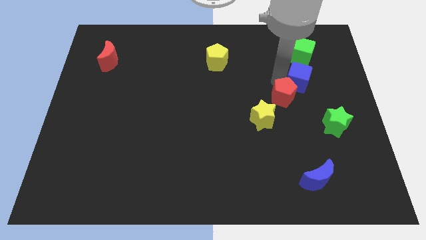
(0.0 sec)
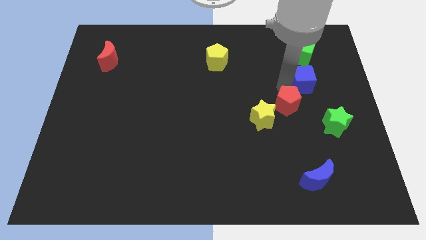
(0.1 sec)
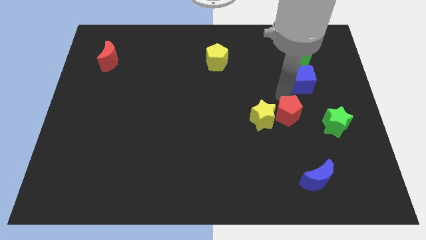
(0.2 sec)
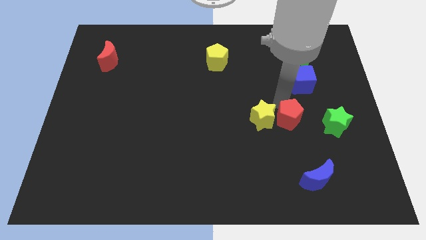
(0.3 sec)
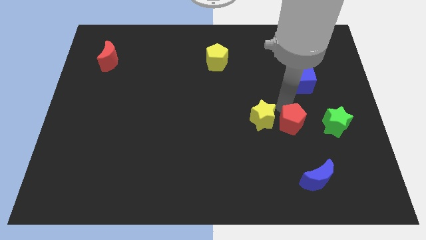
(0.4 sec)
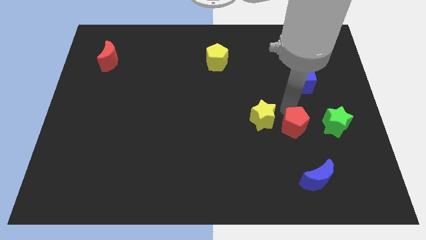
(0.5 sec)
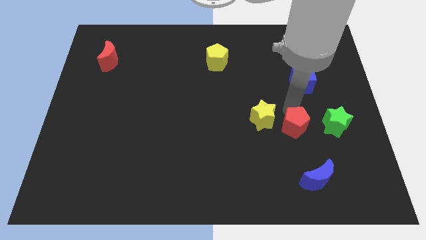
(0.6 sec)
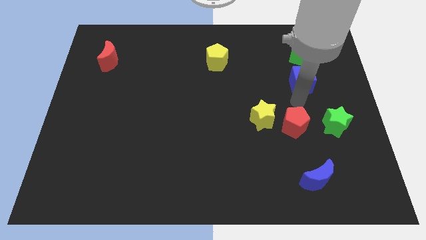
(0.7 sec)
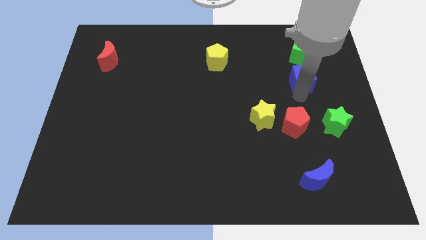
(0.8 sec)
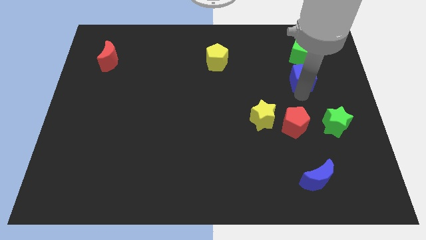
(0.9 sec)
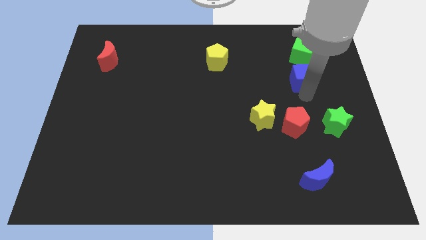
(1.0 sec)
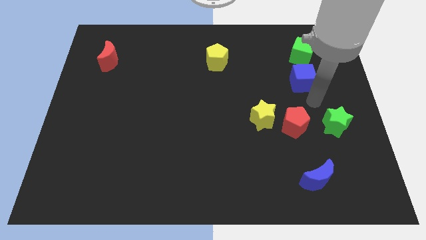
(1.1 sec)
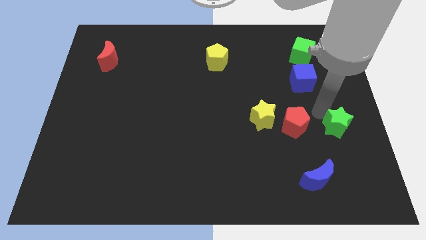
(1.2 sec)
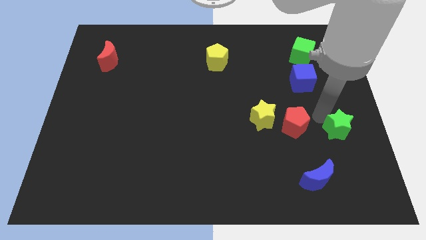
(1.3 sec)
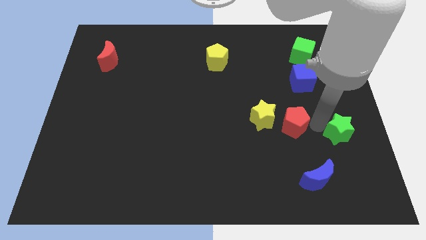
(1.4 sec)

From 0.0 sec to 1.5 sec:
push the red pentagon close to the yellow star

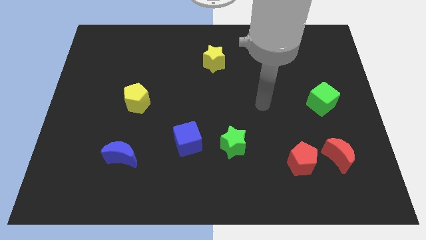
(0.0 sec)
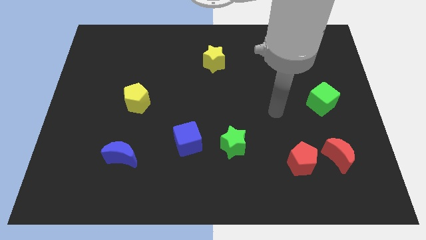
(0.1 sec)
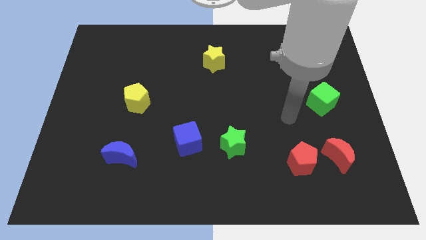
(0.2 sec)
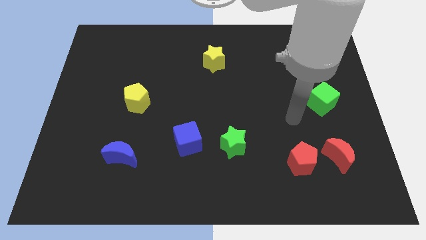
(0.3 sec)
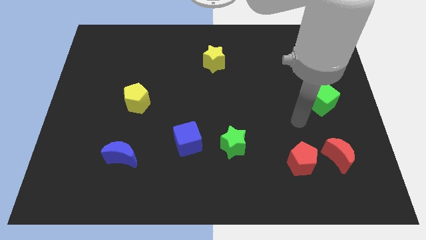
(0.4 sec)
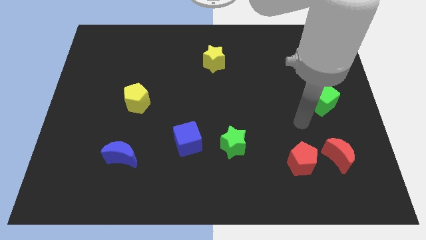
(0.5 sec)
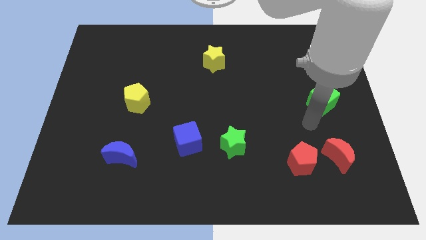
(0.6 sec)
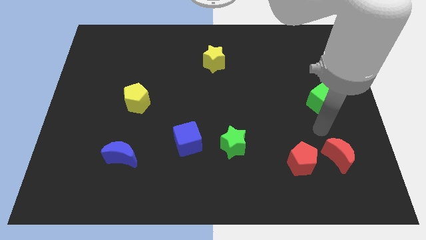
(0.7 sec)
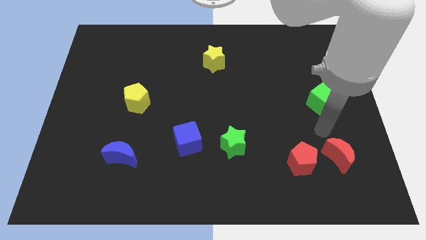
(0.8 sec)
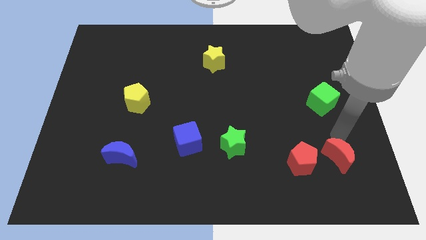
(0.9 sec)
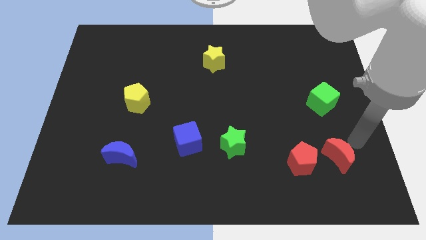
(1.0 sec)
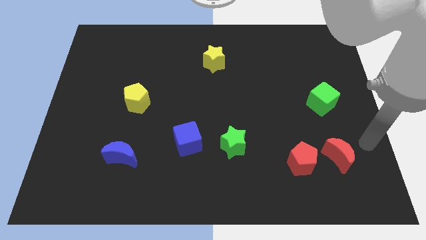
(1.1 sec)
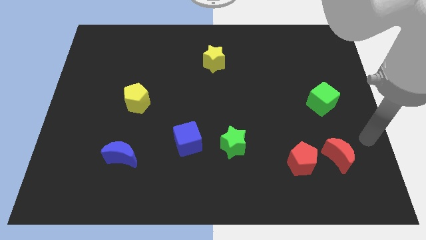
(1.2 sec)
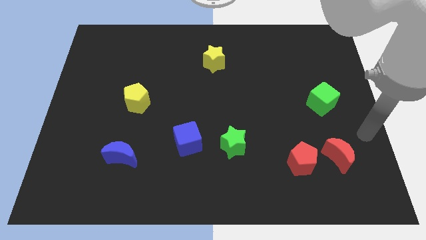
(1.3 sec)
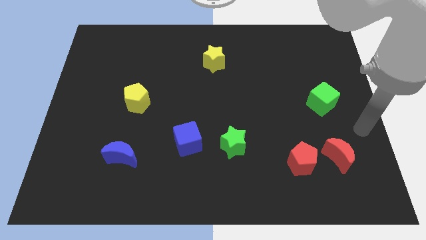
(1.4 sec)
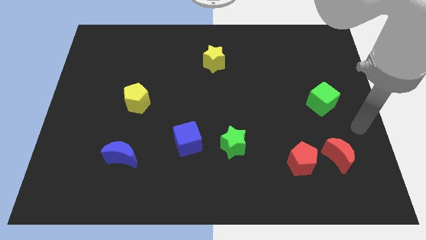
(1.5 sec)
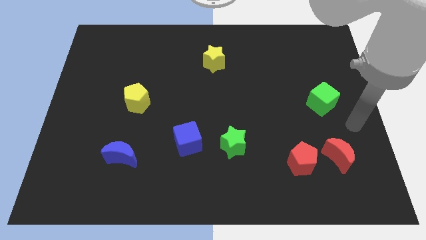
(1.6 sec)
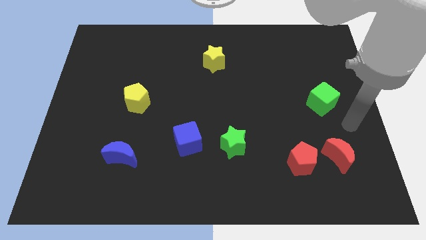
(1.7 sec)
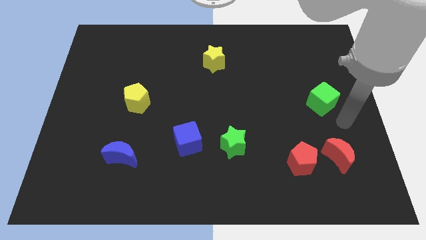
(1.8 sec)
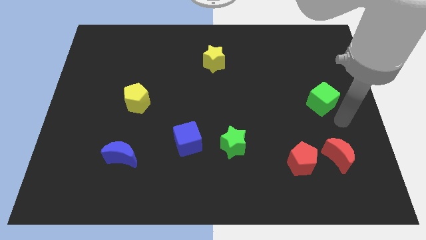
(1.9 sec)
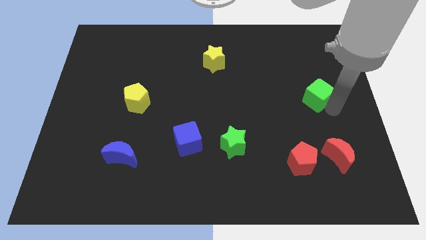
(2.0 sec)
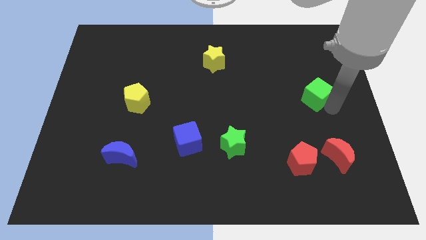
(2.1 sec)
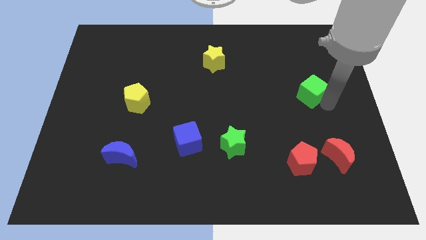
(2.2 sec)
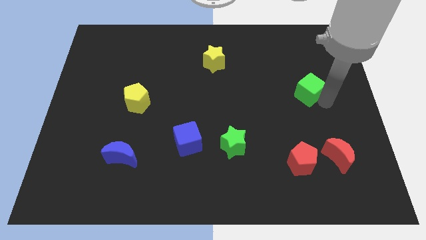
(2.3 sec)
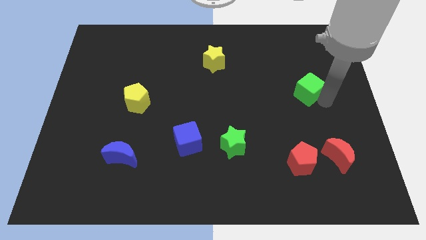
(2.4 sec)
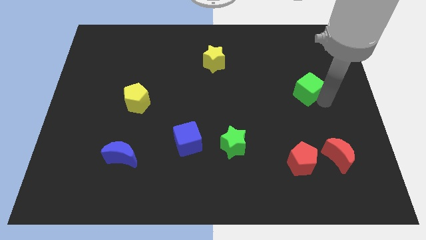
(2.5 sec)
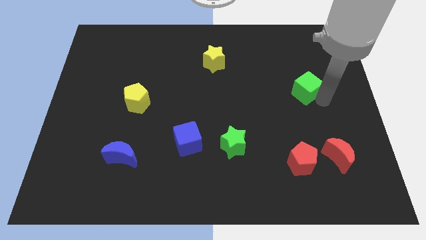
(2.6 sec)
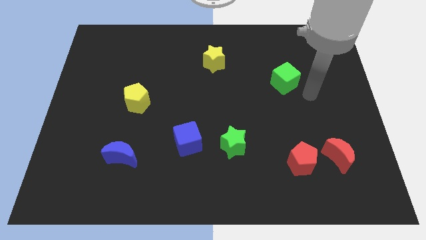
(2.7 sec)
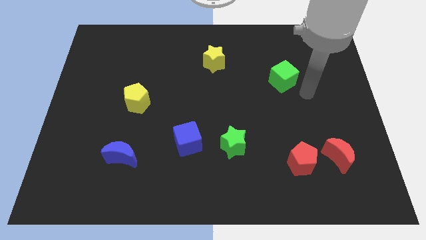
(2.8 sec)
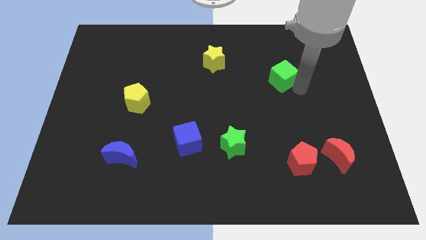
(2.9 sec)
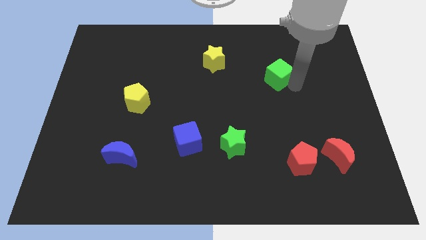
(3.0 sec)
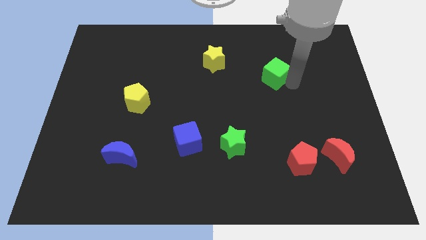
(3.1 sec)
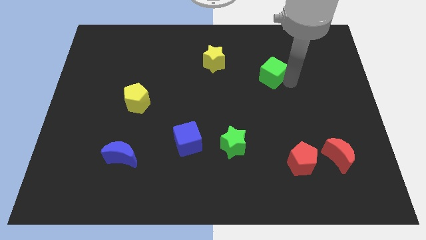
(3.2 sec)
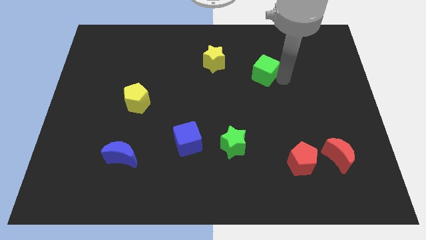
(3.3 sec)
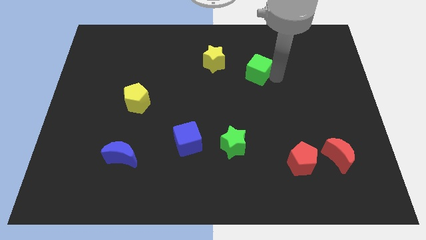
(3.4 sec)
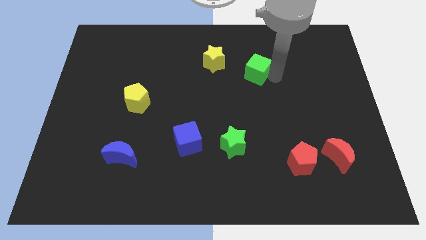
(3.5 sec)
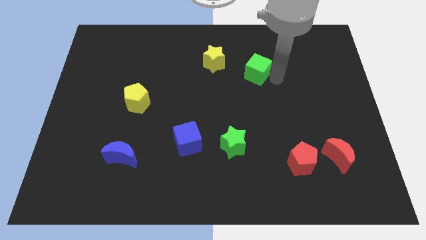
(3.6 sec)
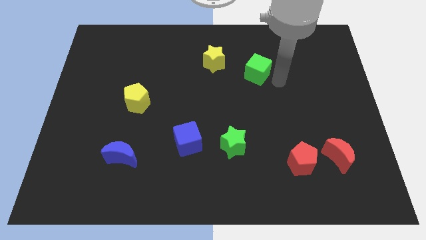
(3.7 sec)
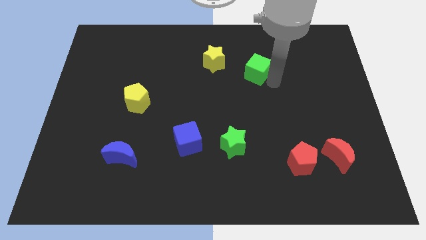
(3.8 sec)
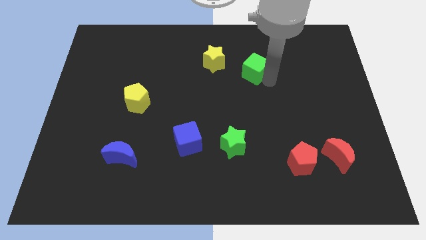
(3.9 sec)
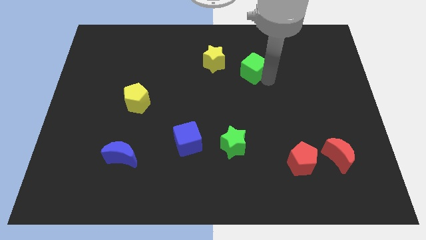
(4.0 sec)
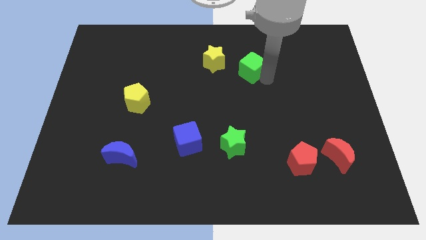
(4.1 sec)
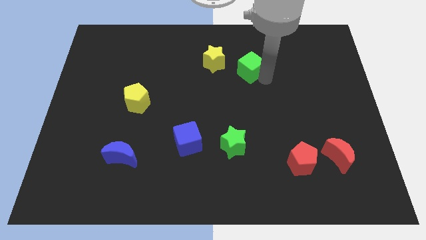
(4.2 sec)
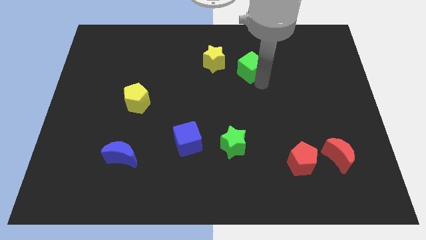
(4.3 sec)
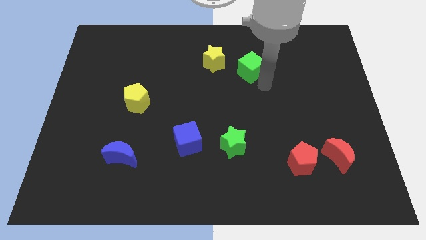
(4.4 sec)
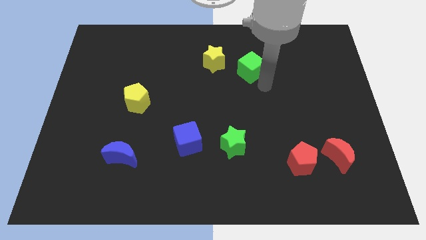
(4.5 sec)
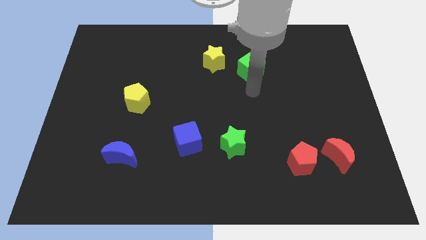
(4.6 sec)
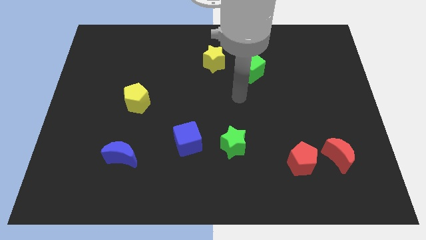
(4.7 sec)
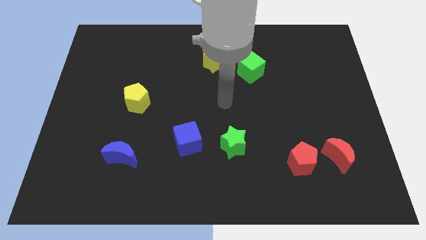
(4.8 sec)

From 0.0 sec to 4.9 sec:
move the green cube towards the yellow star

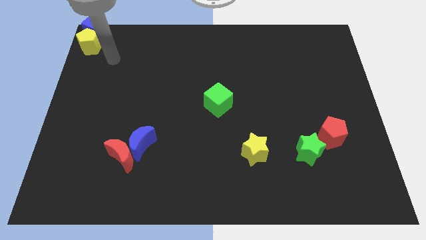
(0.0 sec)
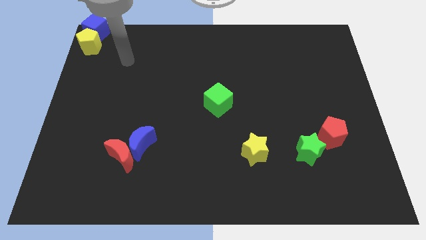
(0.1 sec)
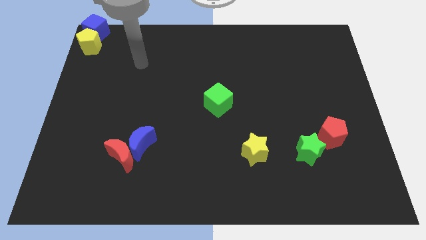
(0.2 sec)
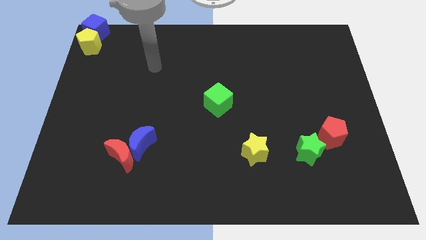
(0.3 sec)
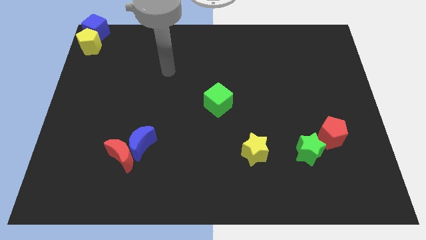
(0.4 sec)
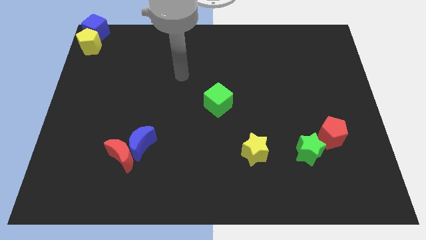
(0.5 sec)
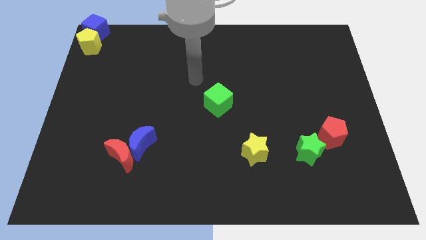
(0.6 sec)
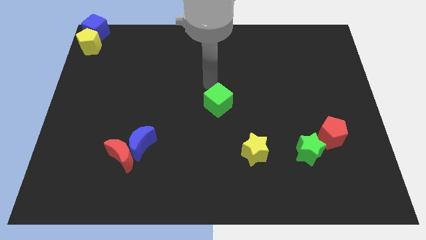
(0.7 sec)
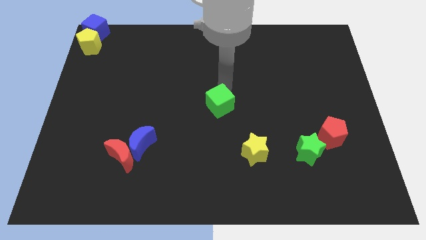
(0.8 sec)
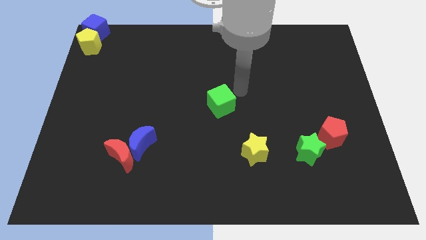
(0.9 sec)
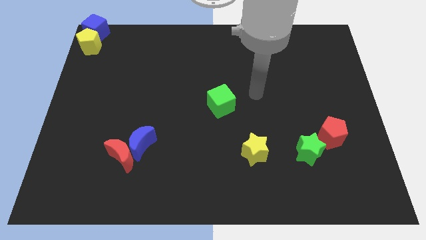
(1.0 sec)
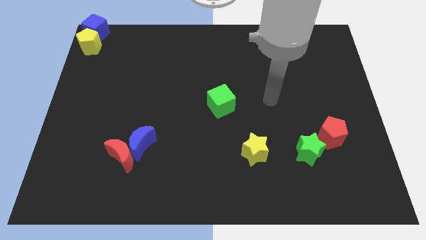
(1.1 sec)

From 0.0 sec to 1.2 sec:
move the arm away from the yellow pentagon

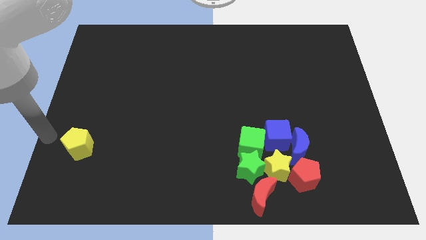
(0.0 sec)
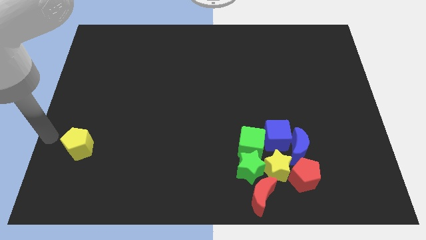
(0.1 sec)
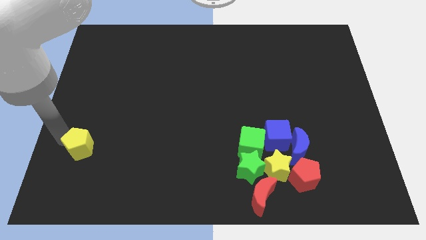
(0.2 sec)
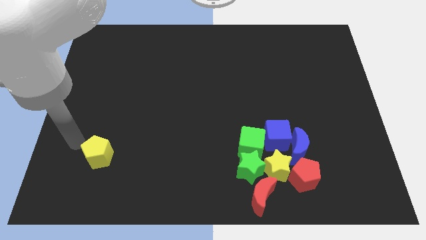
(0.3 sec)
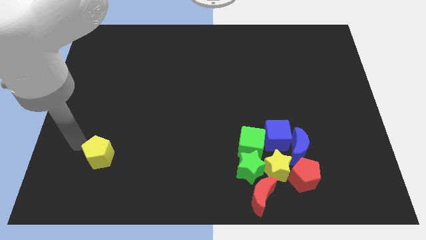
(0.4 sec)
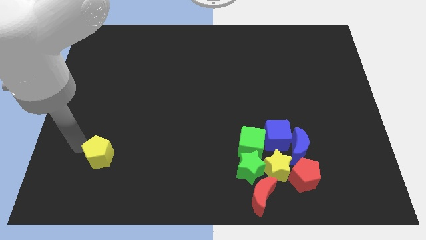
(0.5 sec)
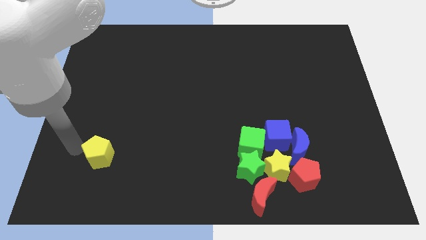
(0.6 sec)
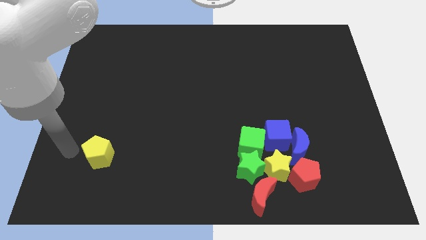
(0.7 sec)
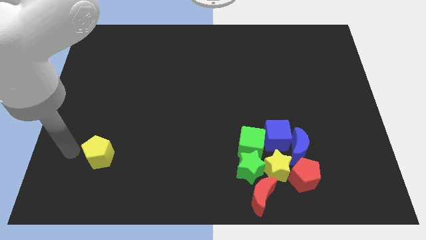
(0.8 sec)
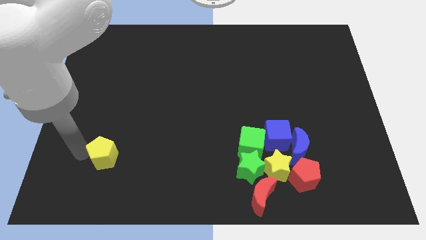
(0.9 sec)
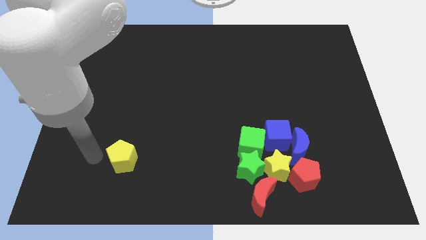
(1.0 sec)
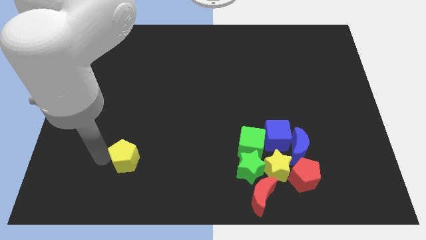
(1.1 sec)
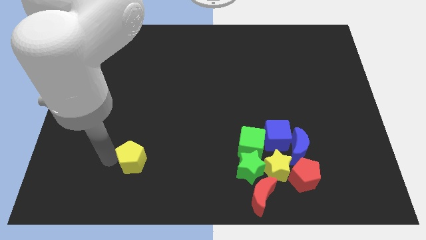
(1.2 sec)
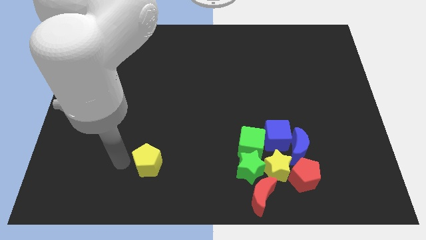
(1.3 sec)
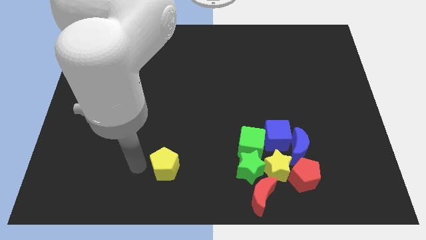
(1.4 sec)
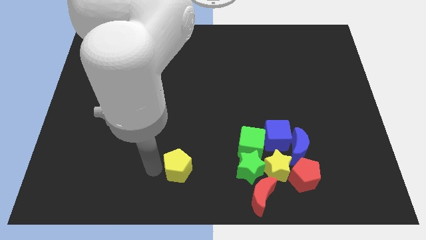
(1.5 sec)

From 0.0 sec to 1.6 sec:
place the yellow pentagon parallel to the green star
